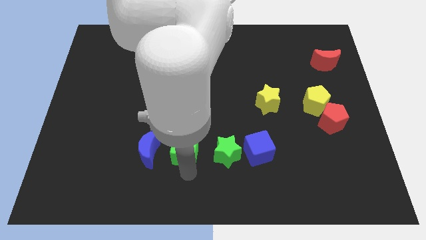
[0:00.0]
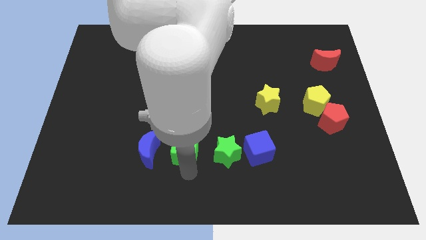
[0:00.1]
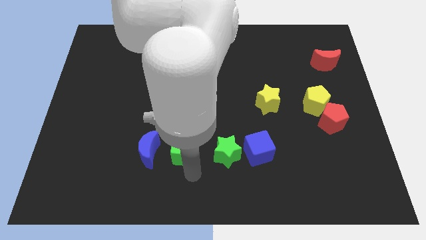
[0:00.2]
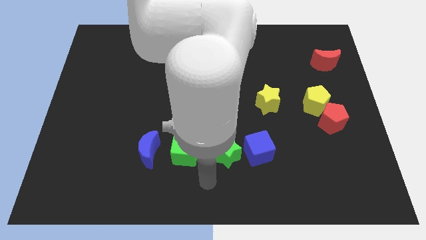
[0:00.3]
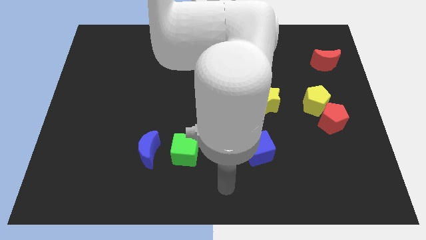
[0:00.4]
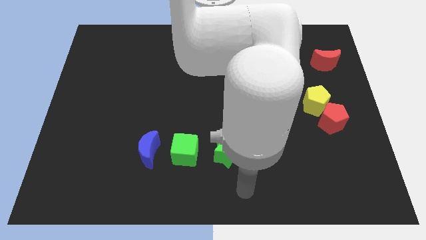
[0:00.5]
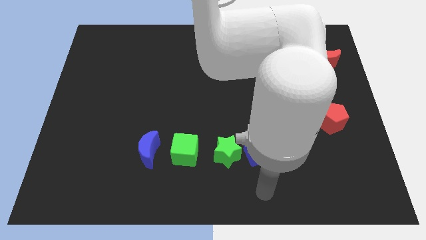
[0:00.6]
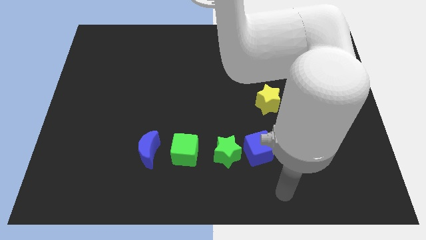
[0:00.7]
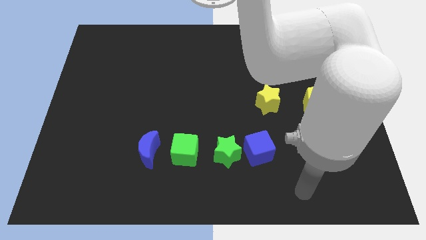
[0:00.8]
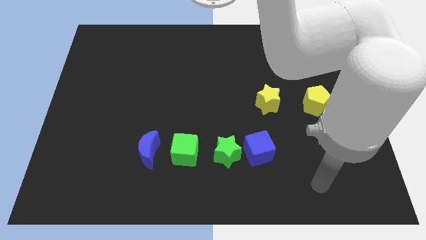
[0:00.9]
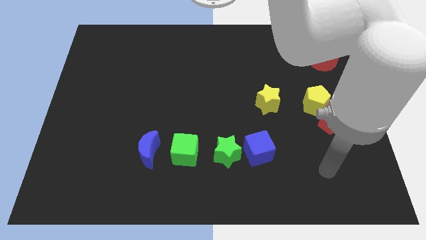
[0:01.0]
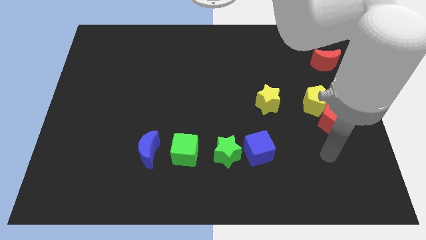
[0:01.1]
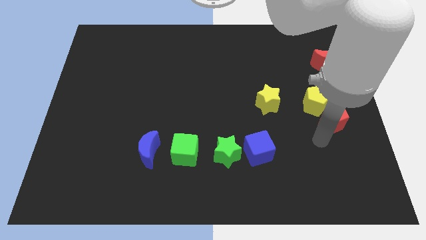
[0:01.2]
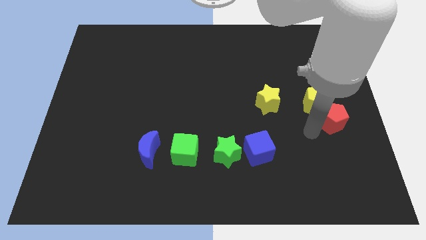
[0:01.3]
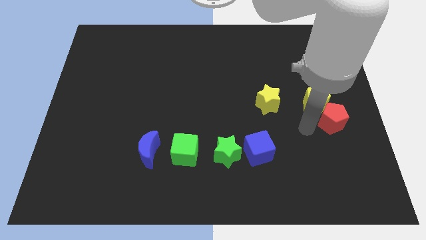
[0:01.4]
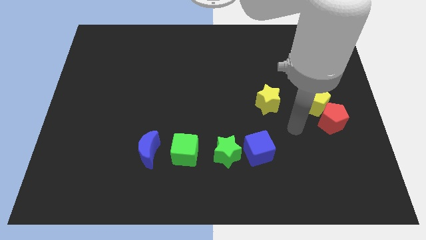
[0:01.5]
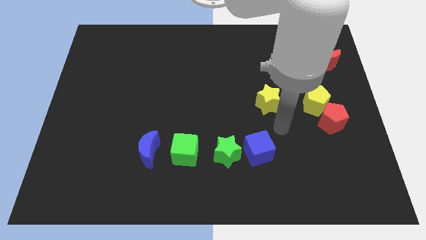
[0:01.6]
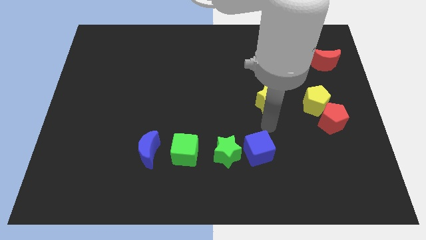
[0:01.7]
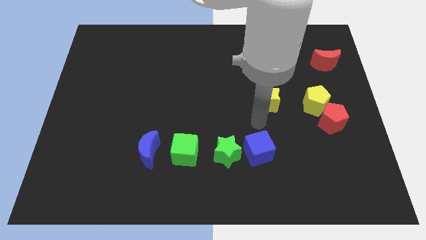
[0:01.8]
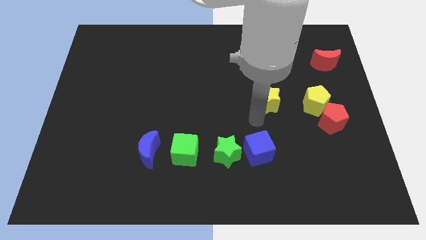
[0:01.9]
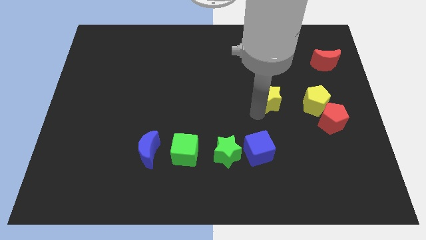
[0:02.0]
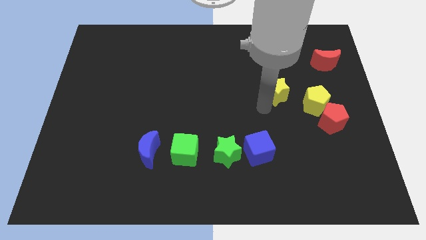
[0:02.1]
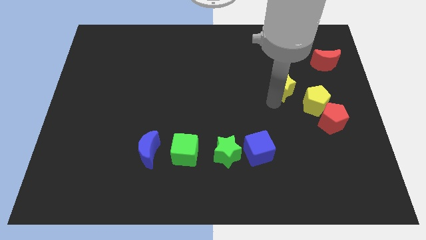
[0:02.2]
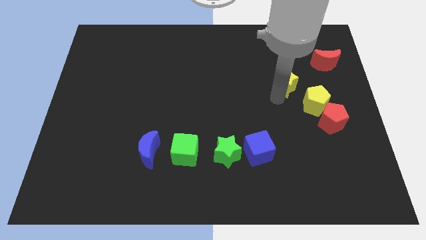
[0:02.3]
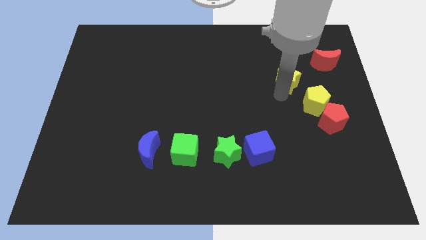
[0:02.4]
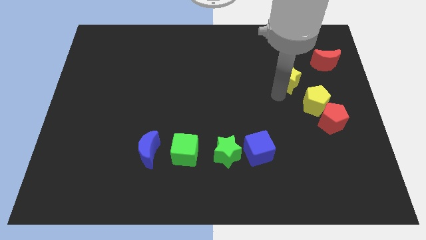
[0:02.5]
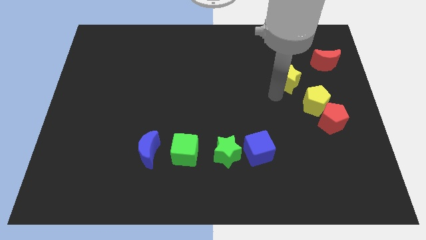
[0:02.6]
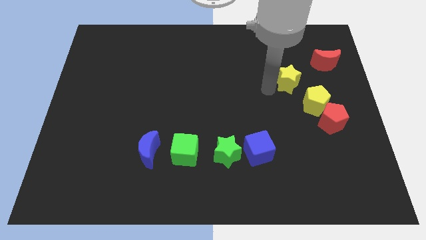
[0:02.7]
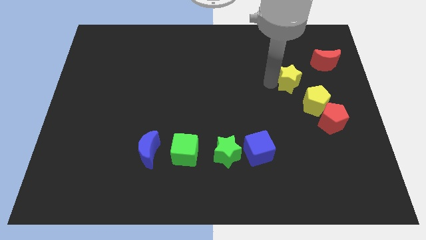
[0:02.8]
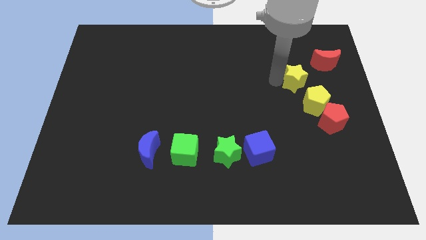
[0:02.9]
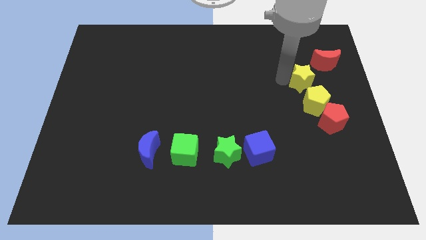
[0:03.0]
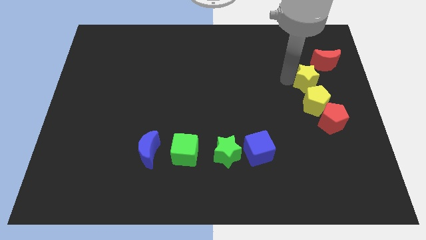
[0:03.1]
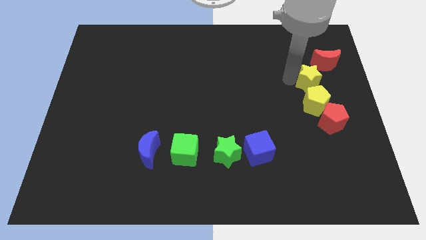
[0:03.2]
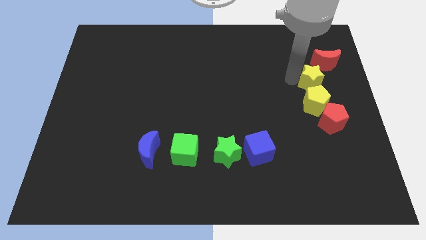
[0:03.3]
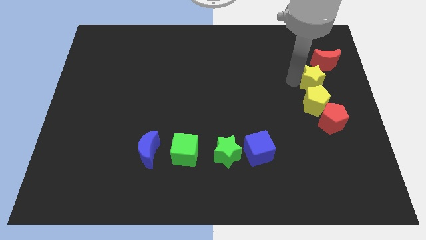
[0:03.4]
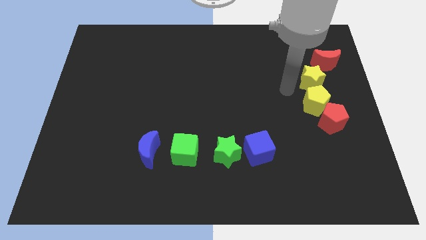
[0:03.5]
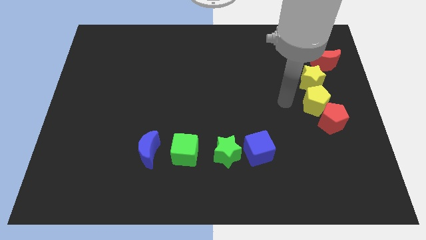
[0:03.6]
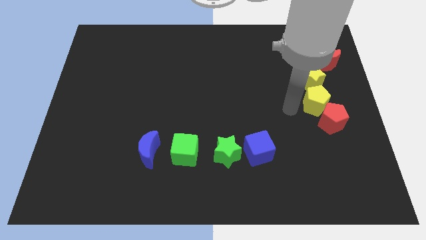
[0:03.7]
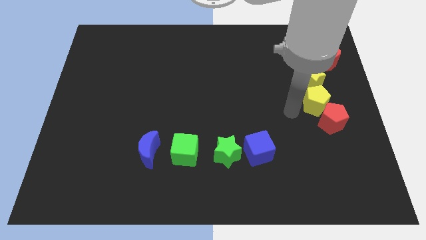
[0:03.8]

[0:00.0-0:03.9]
move yellow star below the red moon

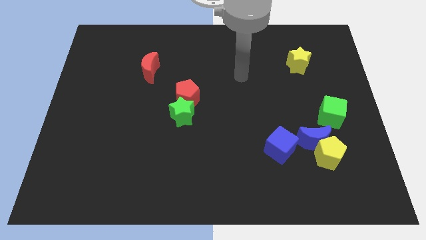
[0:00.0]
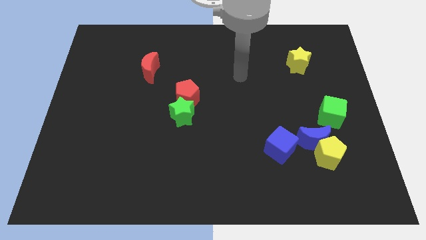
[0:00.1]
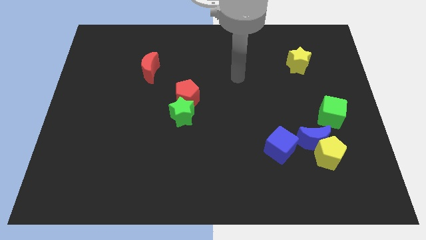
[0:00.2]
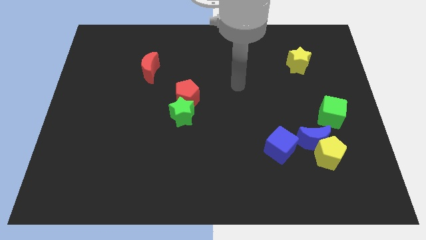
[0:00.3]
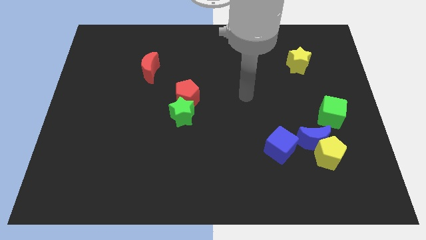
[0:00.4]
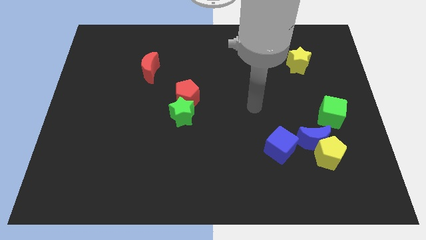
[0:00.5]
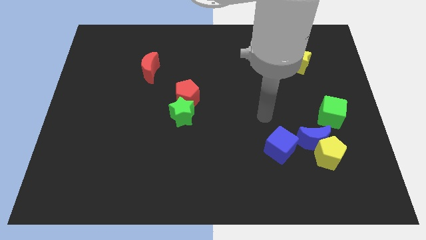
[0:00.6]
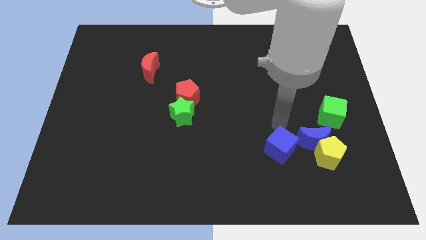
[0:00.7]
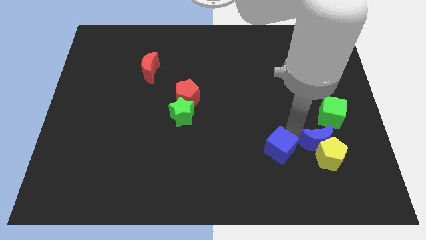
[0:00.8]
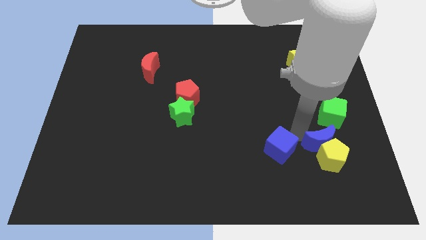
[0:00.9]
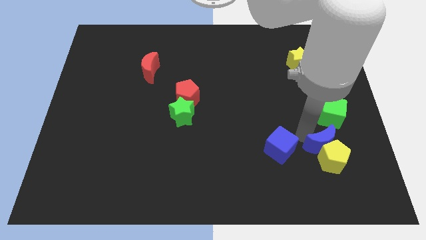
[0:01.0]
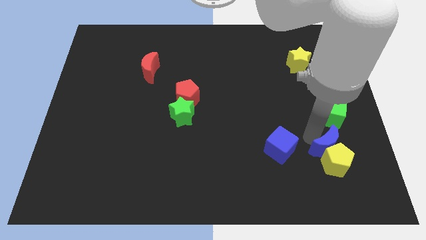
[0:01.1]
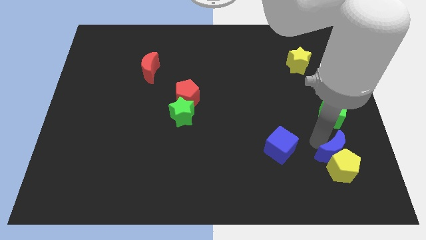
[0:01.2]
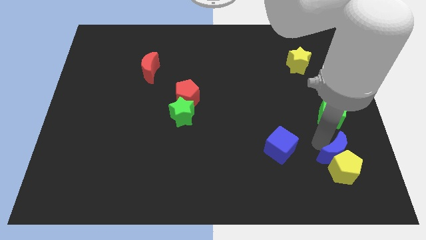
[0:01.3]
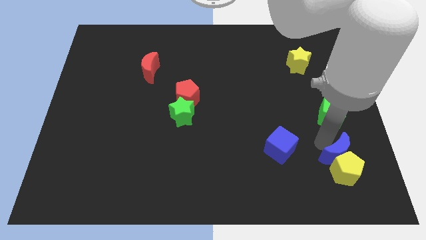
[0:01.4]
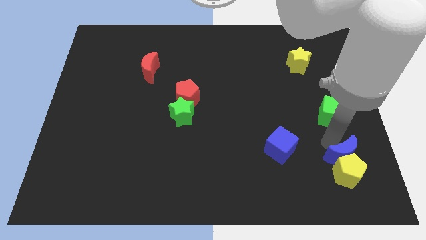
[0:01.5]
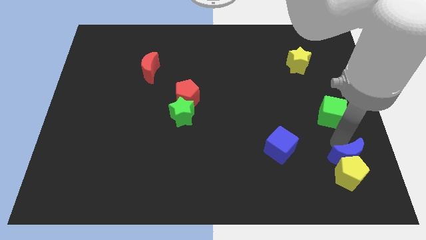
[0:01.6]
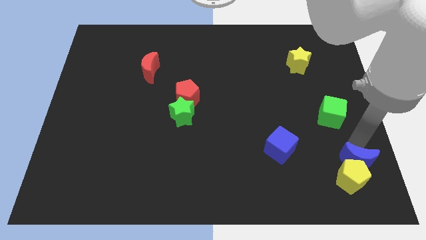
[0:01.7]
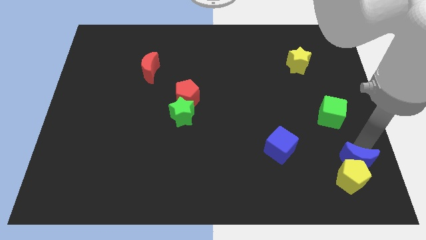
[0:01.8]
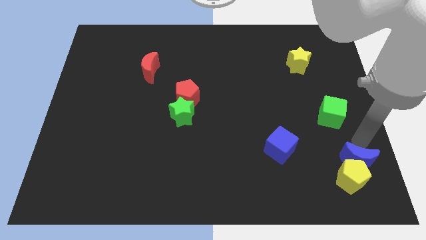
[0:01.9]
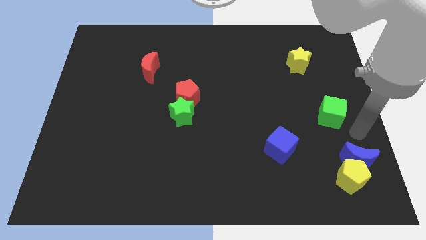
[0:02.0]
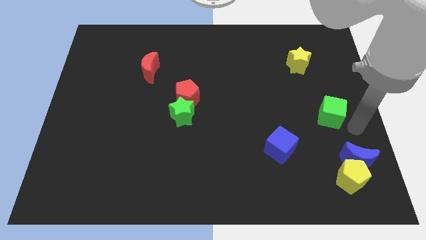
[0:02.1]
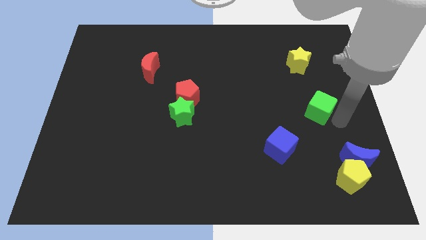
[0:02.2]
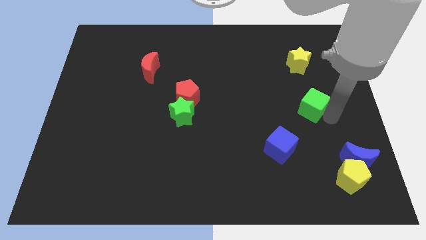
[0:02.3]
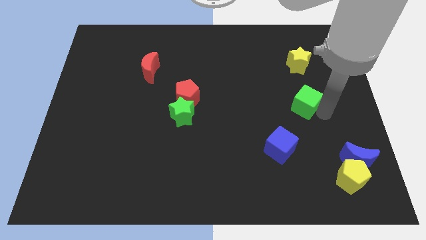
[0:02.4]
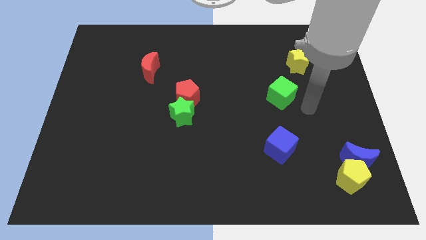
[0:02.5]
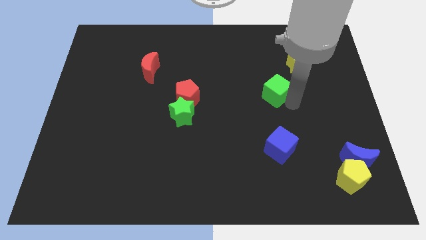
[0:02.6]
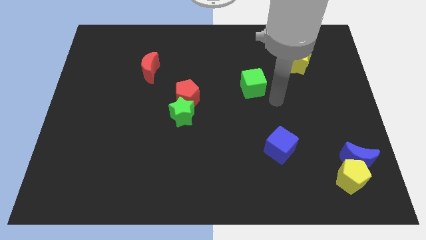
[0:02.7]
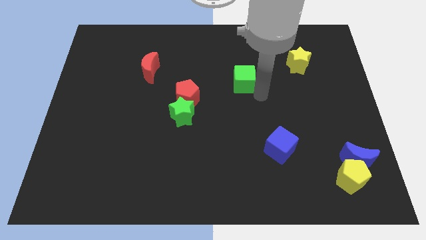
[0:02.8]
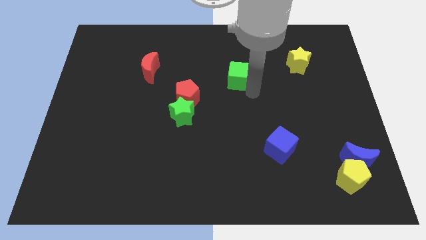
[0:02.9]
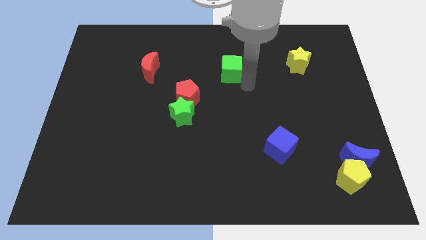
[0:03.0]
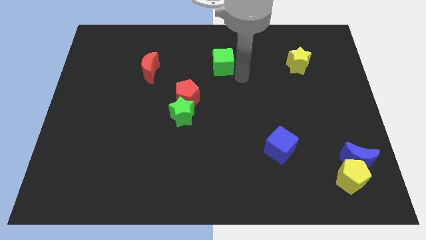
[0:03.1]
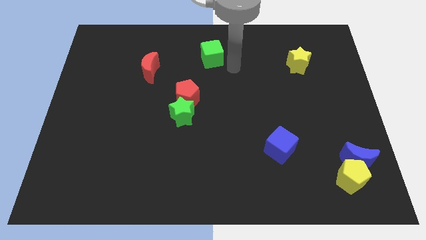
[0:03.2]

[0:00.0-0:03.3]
move the blue crescent yellow pentagon and green star diagonal to each other

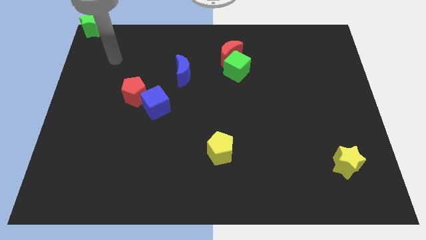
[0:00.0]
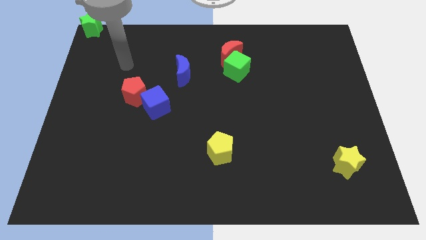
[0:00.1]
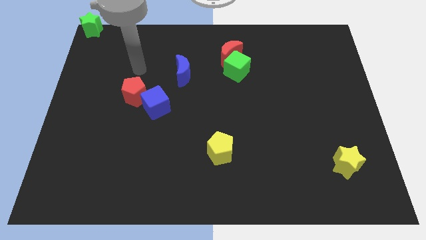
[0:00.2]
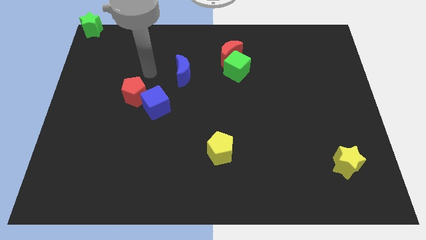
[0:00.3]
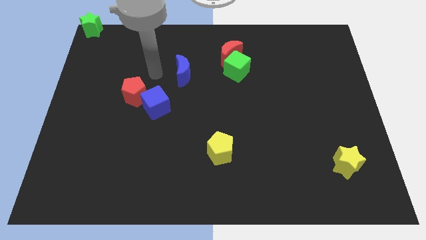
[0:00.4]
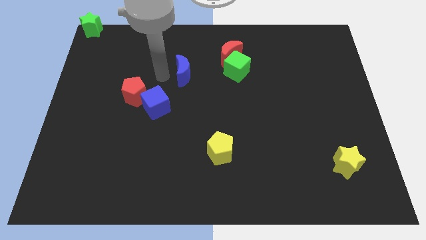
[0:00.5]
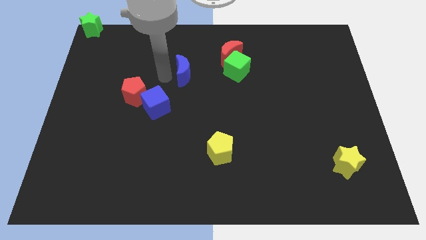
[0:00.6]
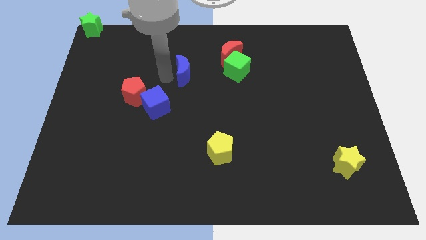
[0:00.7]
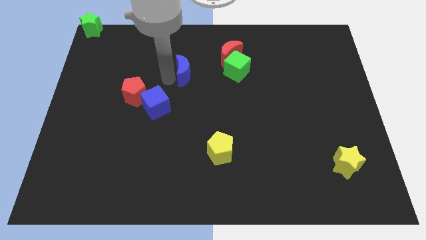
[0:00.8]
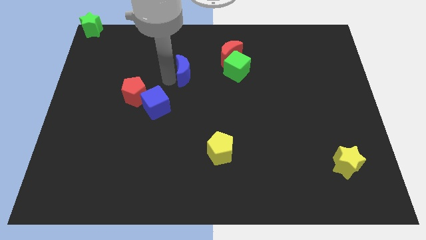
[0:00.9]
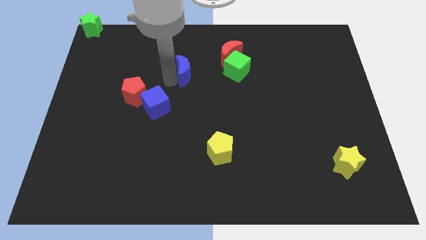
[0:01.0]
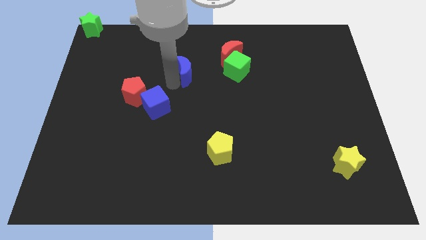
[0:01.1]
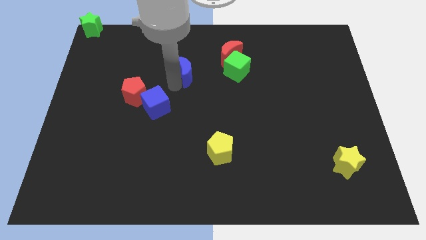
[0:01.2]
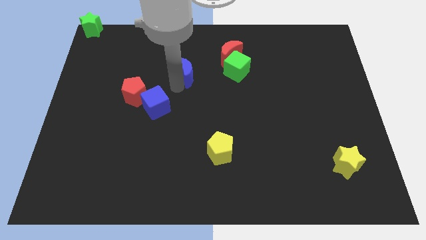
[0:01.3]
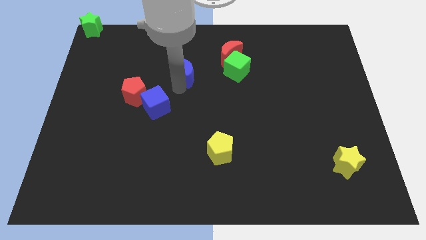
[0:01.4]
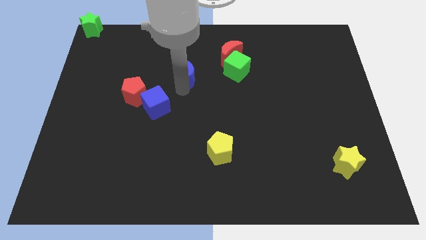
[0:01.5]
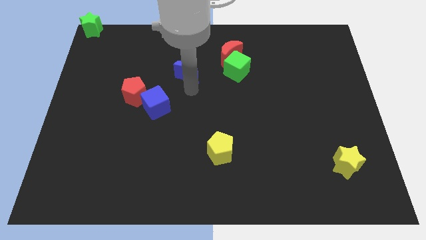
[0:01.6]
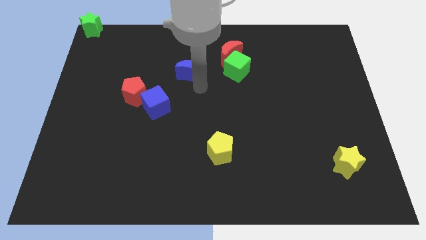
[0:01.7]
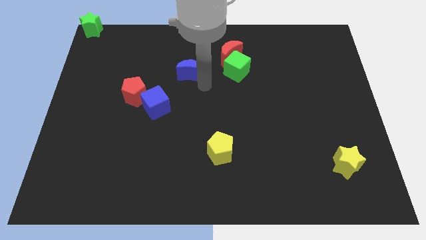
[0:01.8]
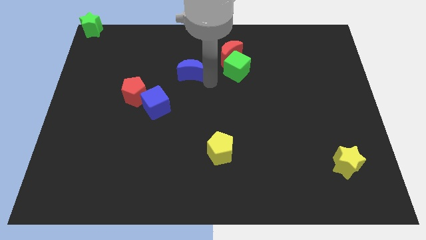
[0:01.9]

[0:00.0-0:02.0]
move blue moon towards green cube
